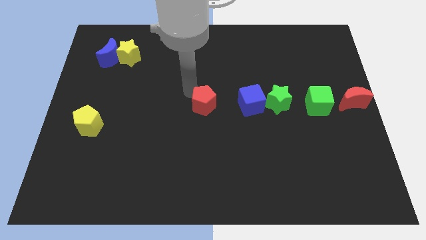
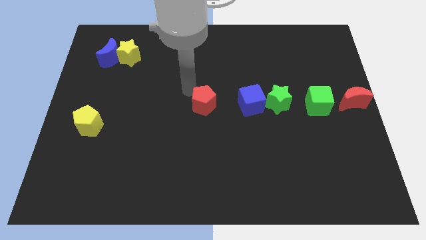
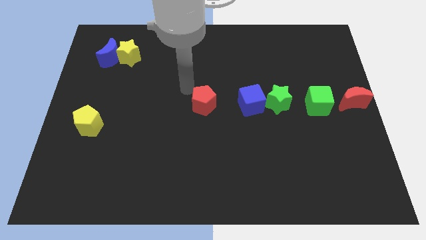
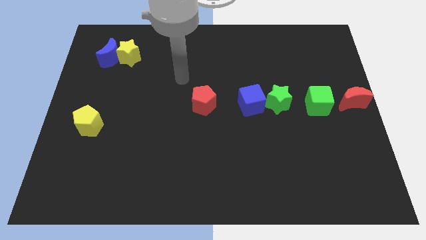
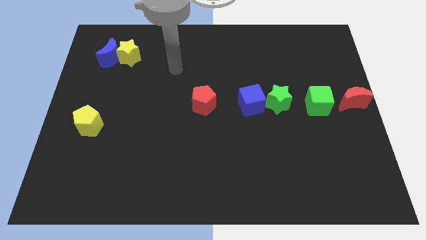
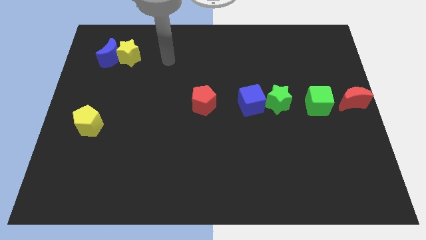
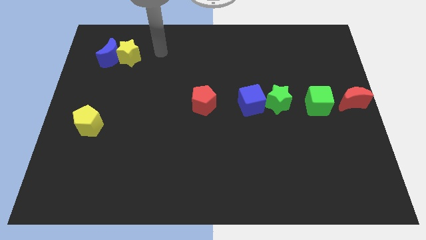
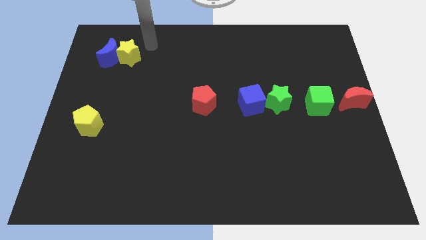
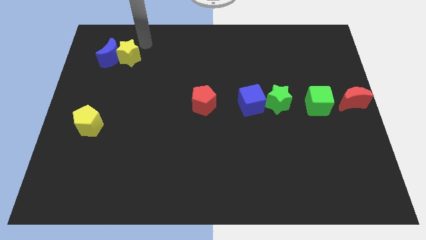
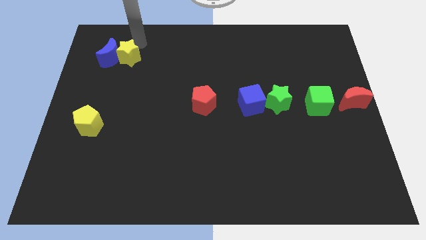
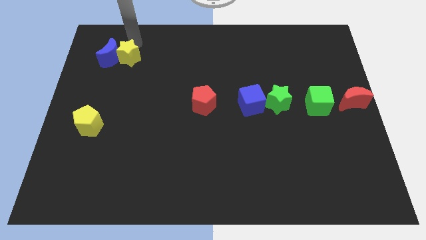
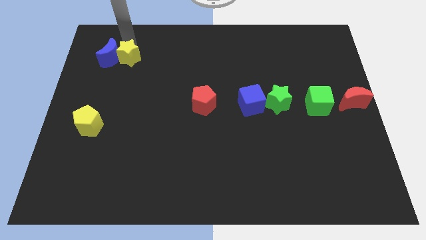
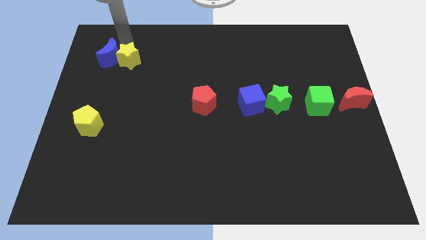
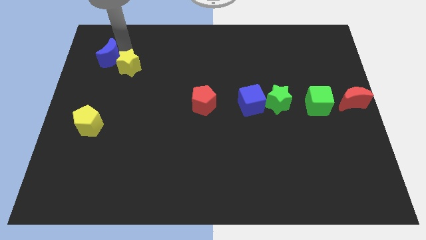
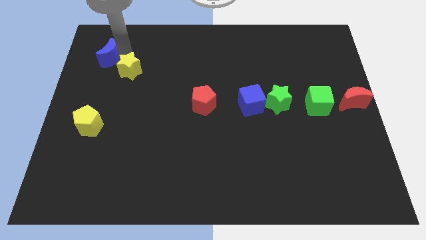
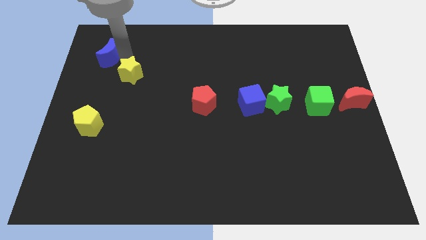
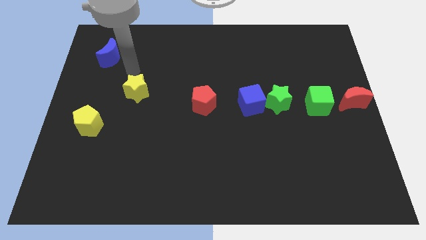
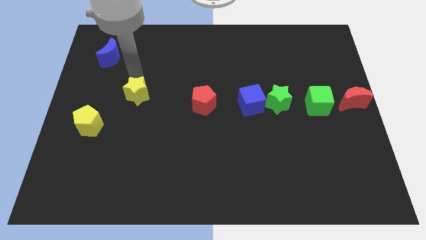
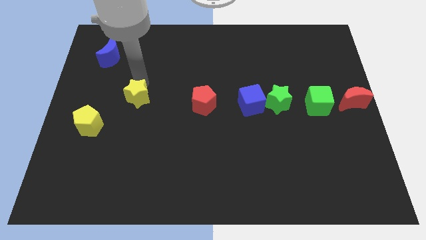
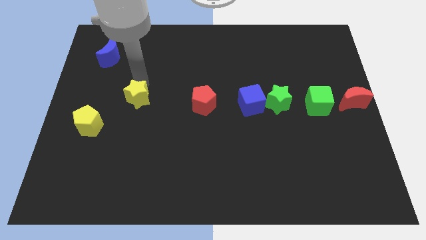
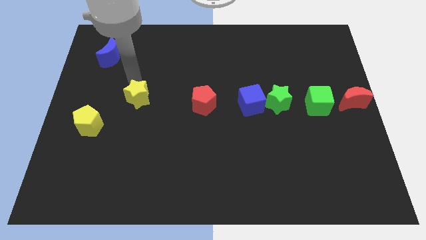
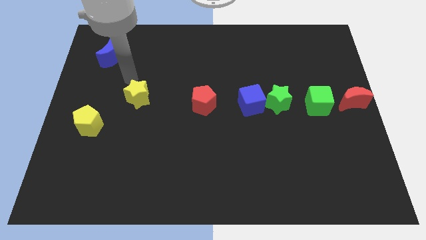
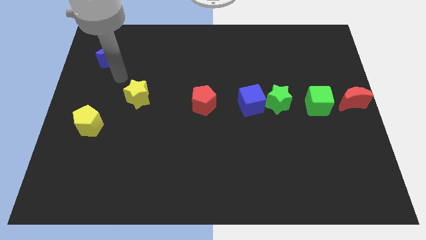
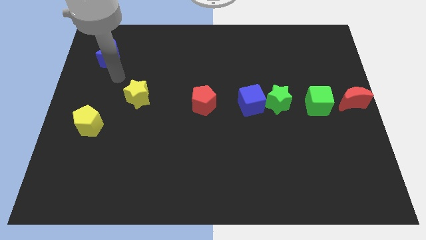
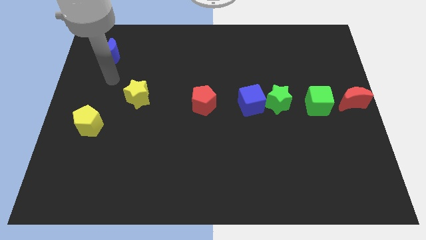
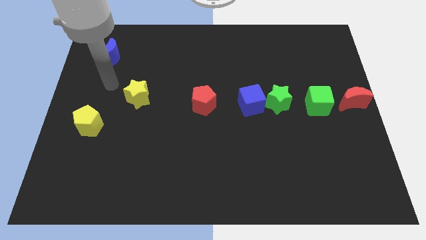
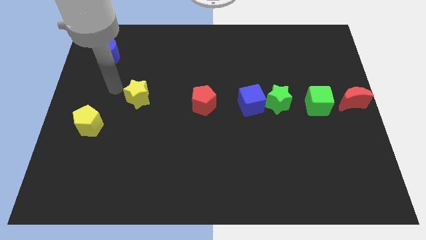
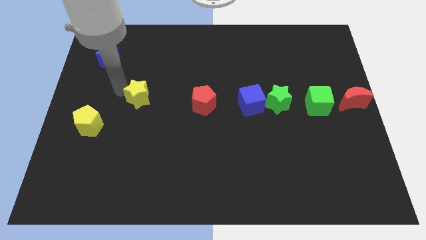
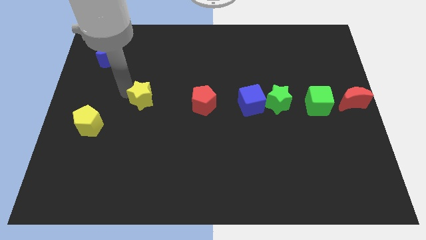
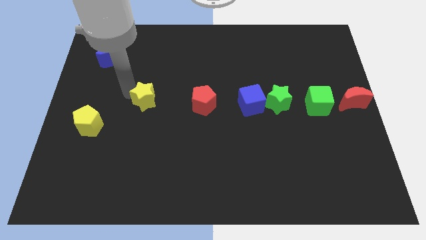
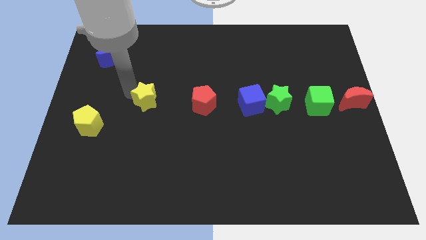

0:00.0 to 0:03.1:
slide the yellow star at the left of the red pentagon

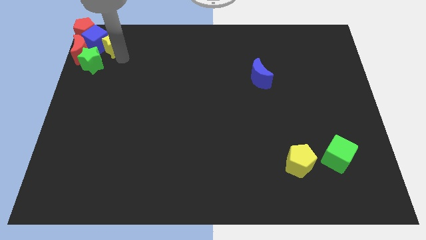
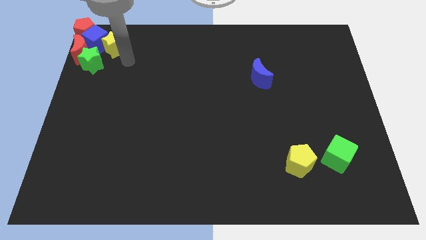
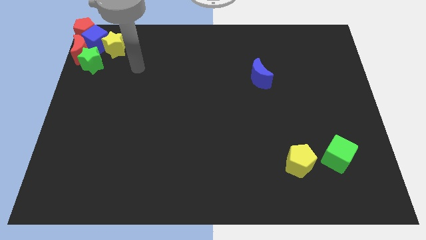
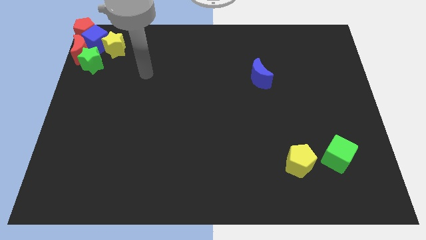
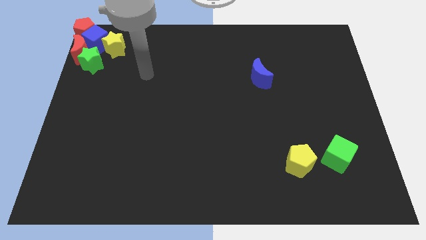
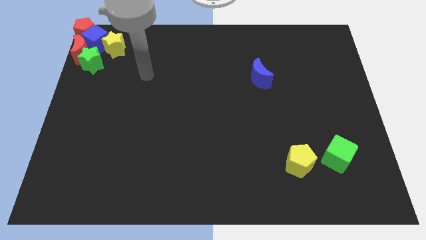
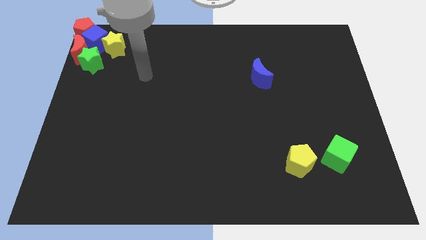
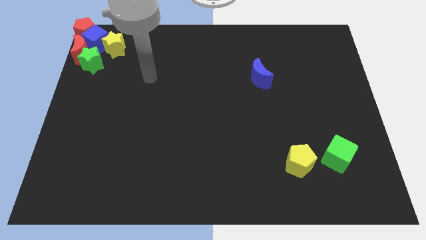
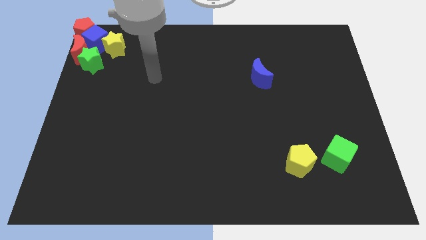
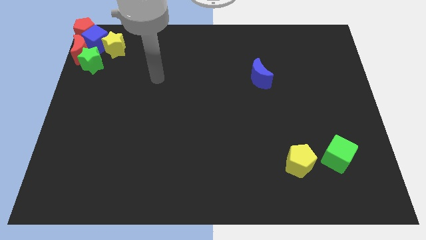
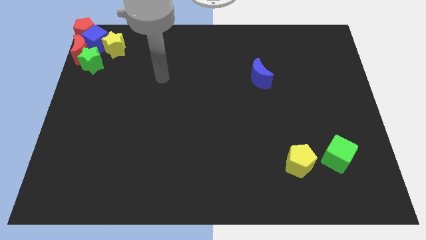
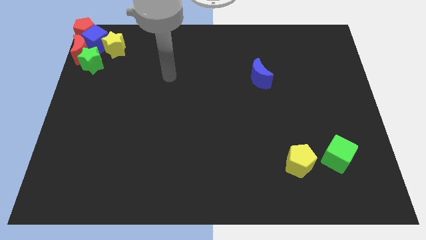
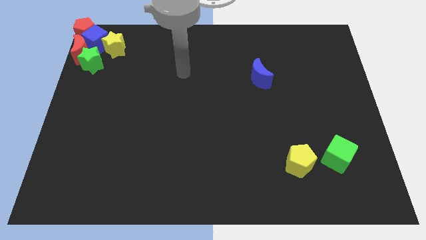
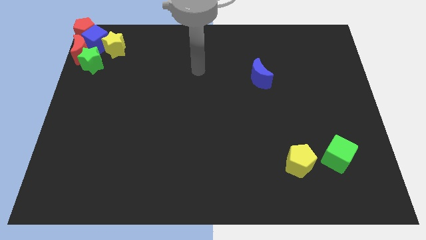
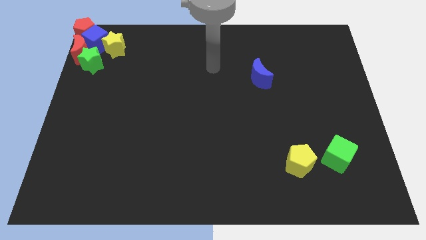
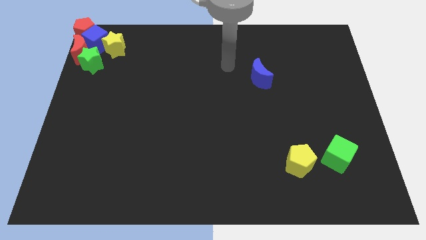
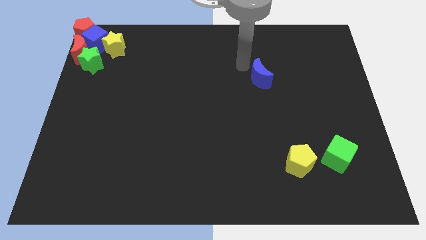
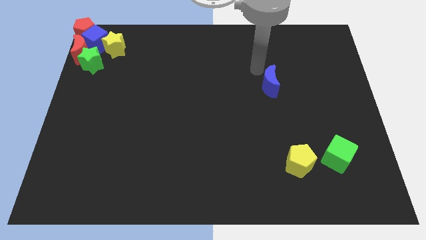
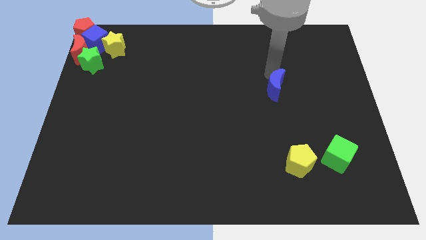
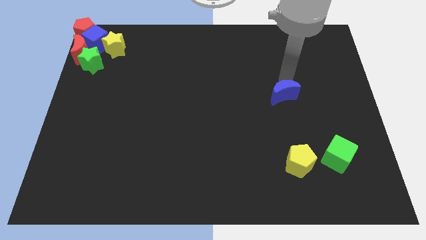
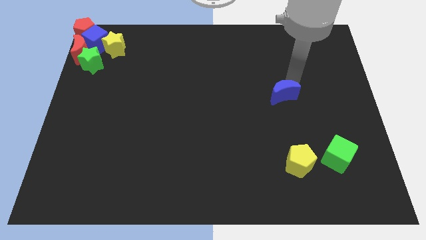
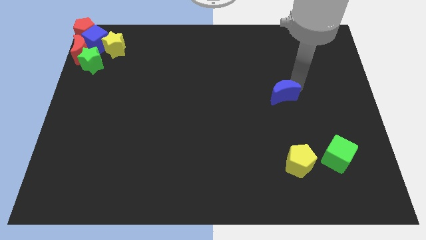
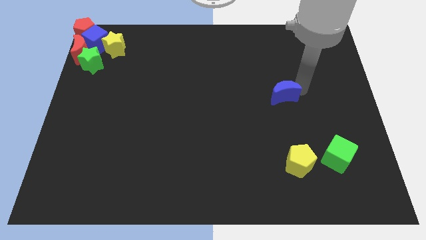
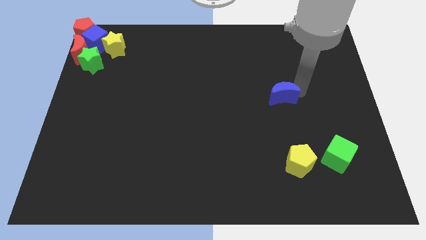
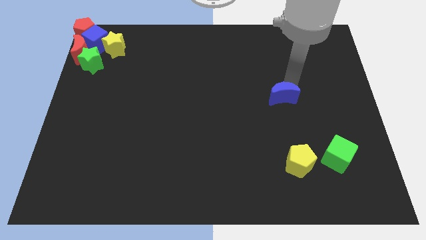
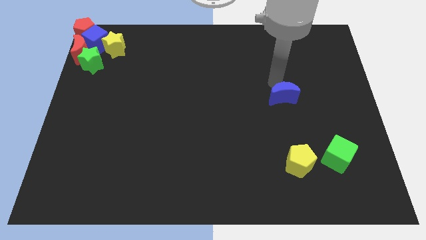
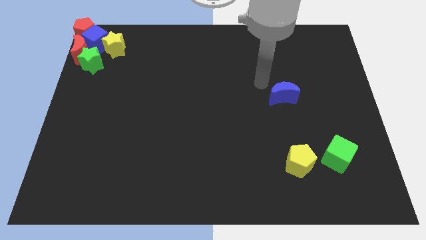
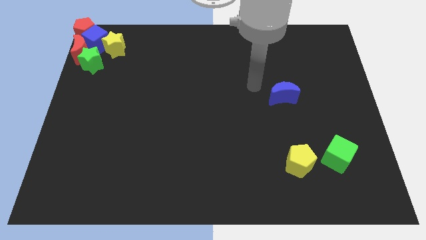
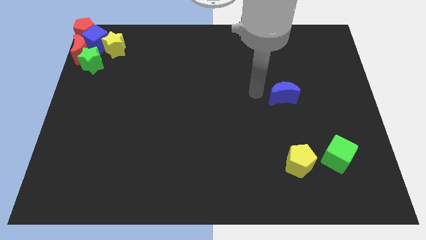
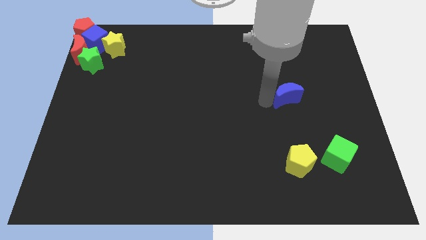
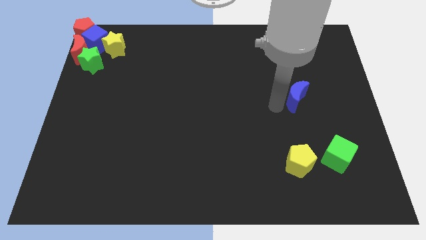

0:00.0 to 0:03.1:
place blue moon on top of yellow pentagon

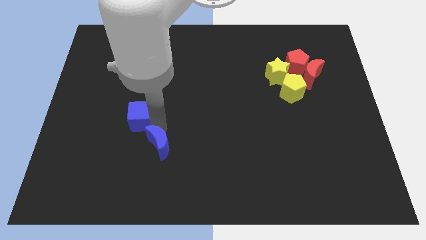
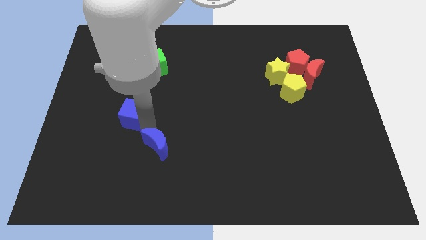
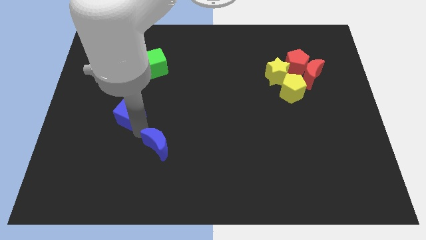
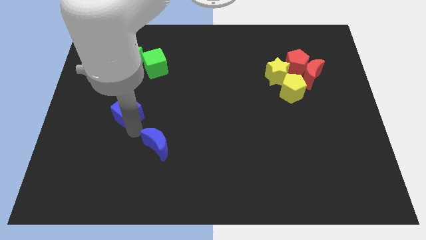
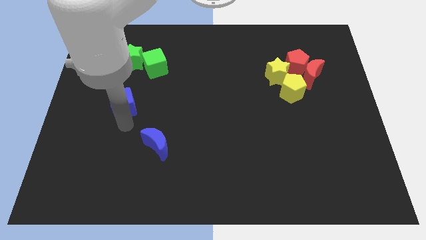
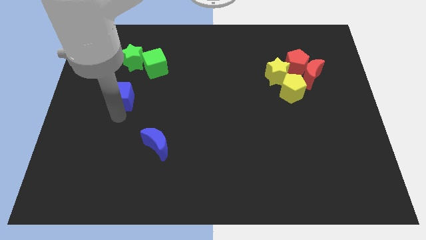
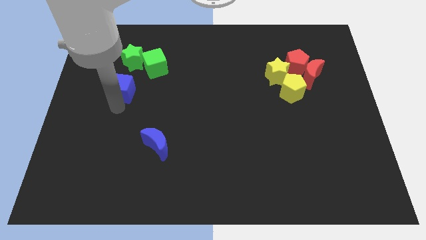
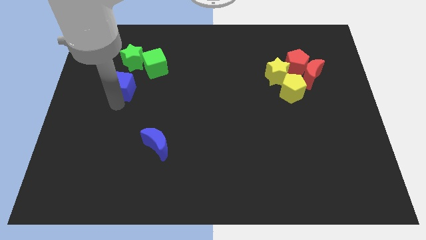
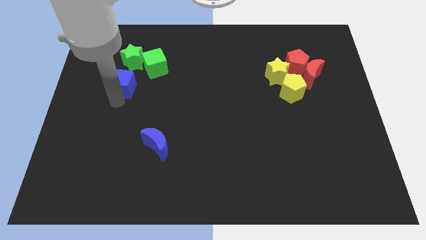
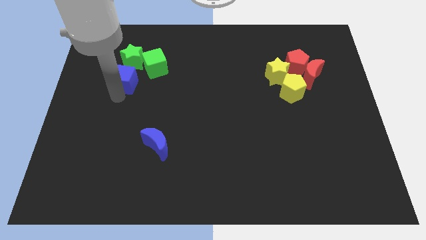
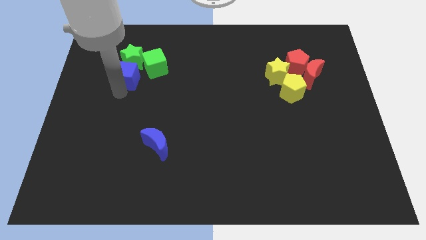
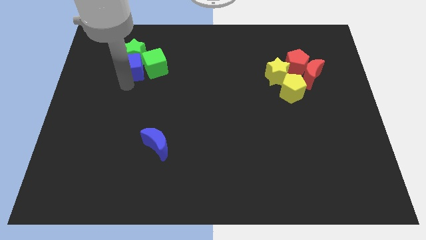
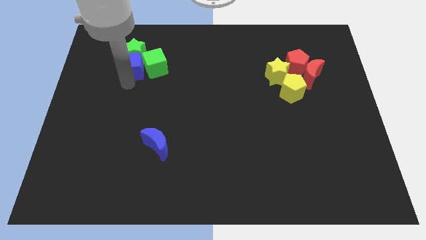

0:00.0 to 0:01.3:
slide the blue cube into the bottom side of the green star

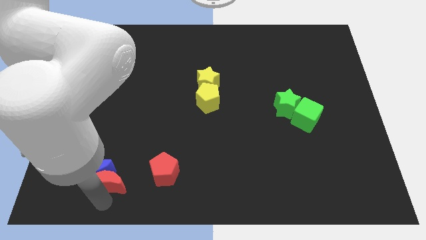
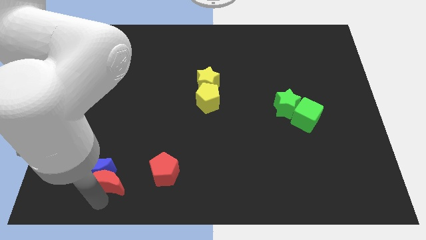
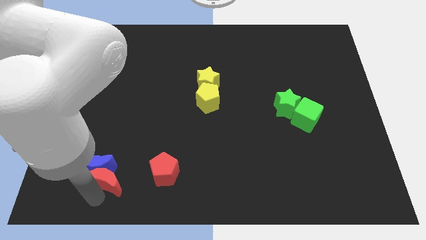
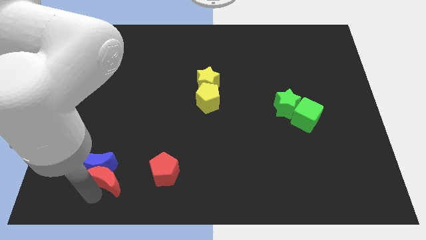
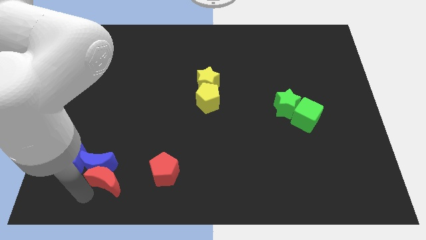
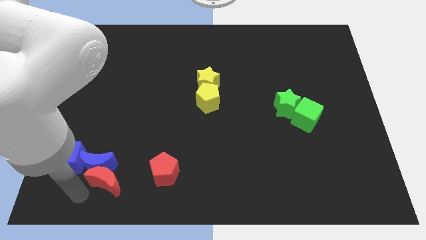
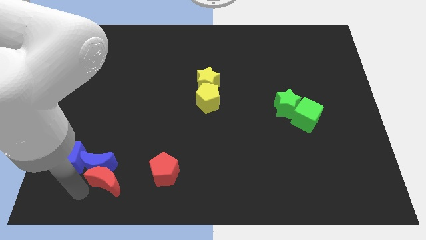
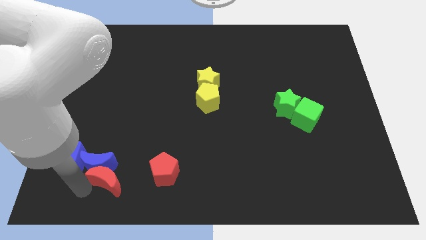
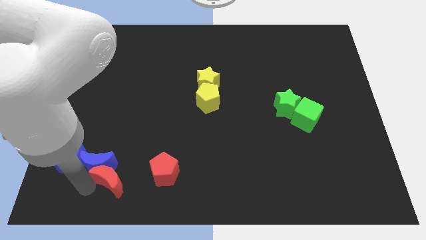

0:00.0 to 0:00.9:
push the red crescent into blue crescent

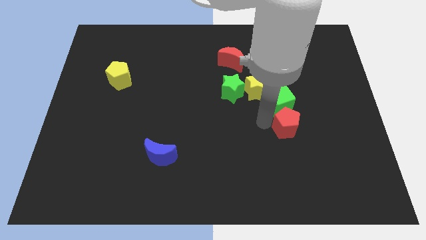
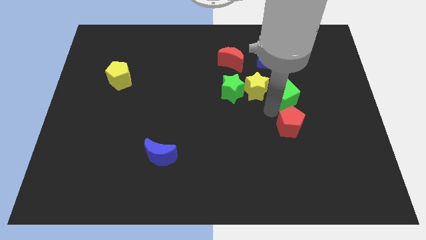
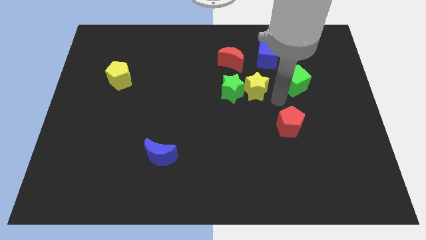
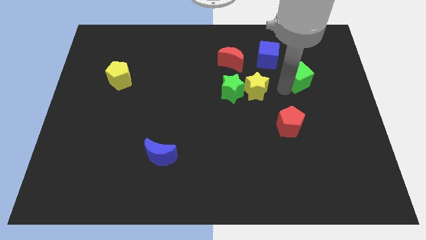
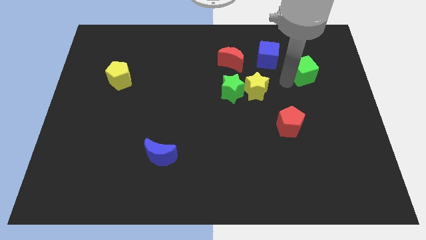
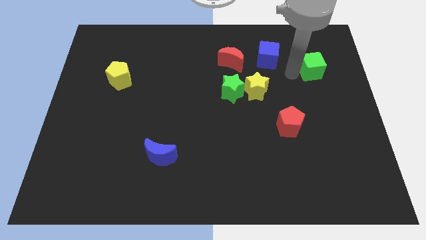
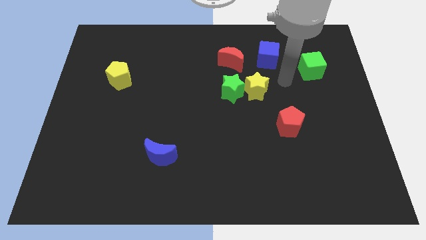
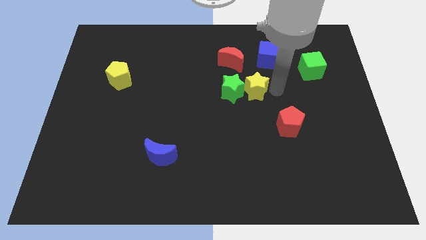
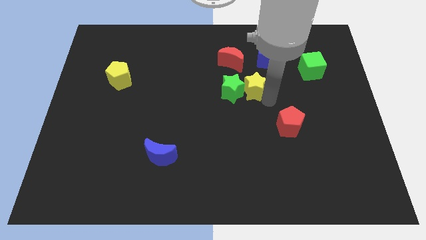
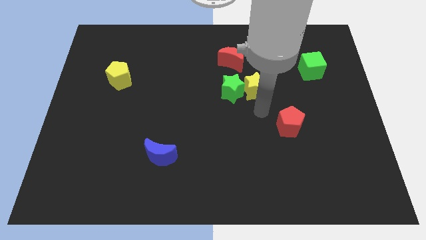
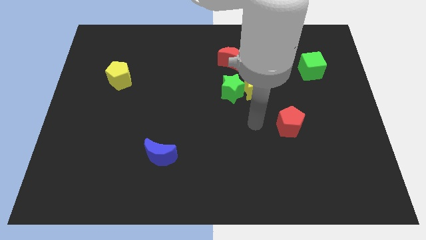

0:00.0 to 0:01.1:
separate the green cube from the red pentagon
